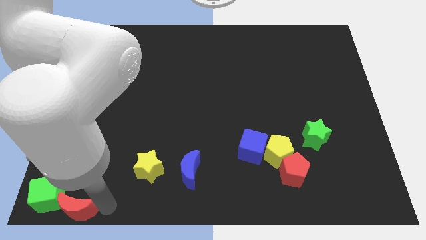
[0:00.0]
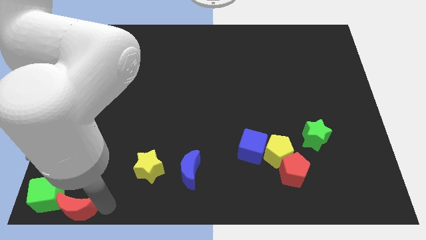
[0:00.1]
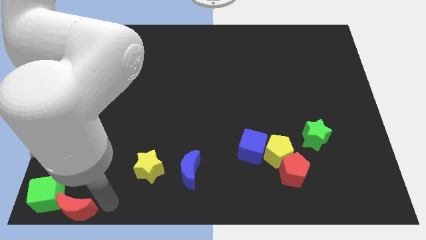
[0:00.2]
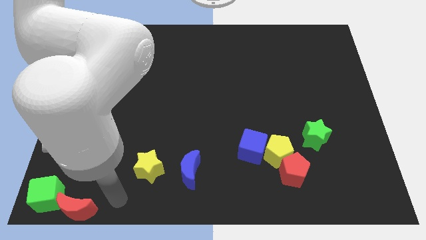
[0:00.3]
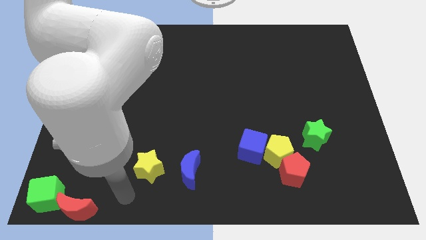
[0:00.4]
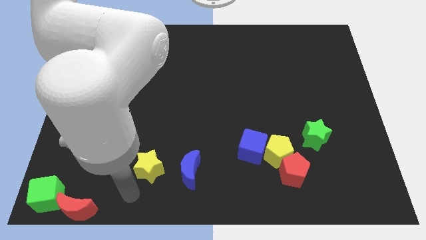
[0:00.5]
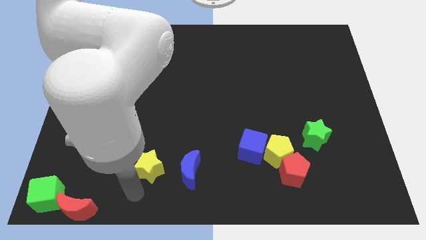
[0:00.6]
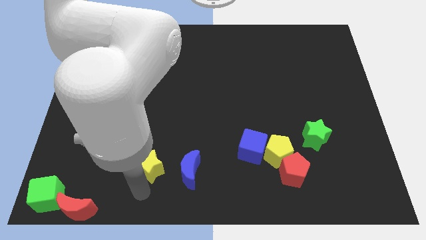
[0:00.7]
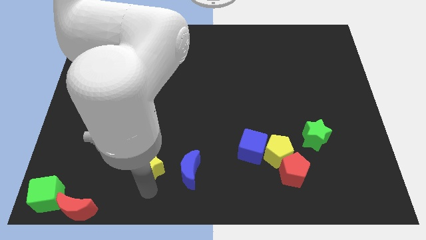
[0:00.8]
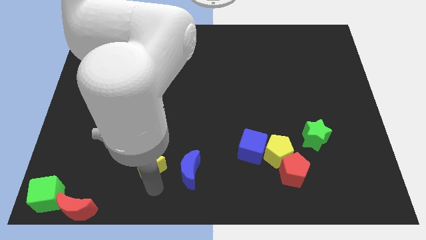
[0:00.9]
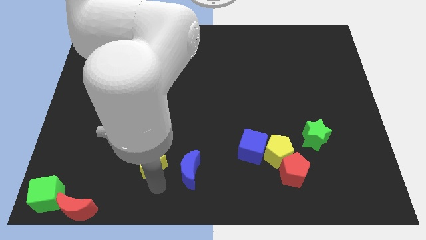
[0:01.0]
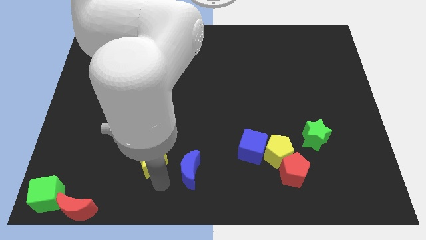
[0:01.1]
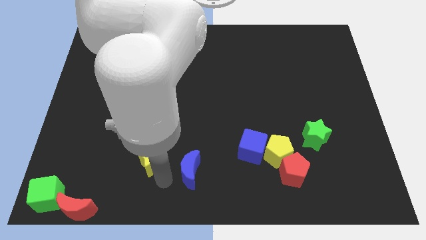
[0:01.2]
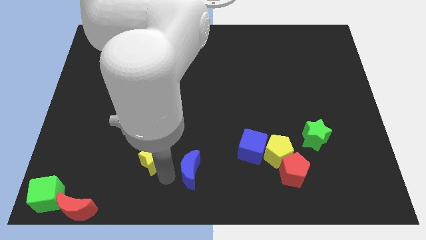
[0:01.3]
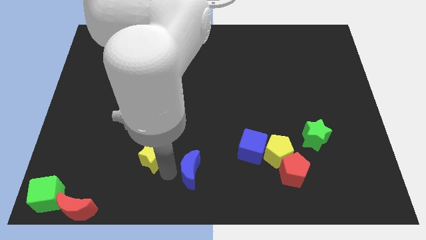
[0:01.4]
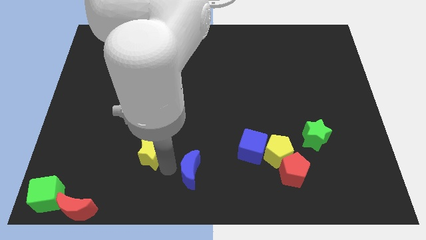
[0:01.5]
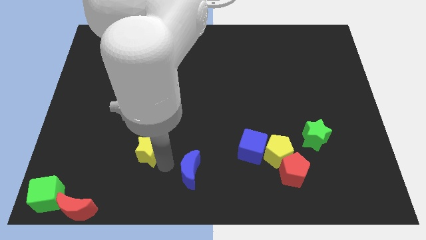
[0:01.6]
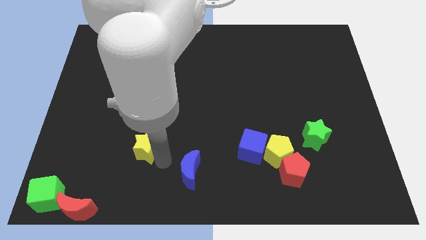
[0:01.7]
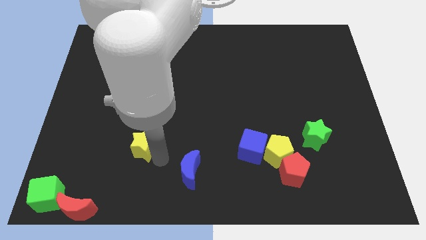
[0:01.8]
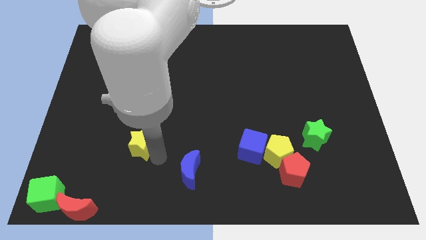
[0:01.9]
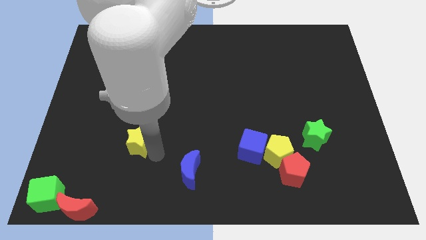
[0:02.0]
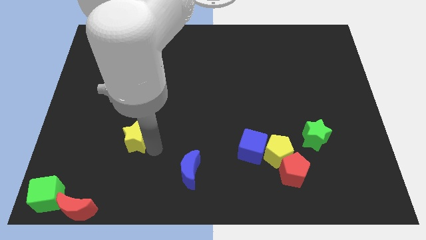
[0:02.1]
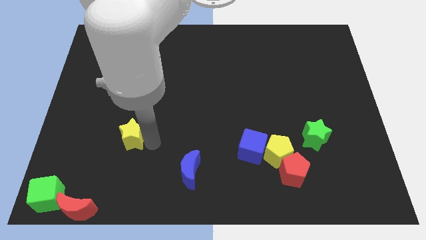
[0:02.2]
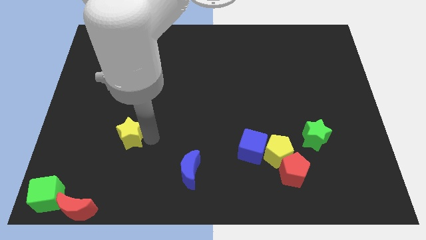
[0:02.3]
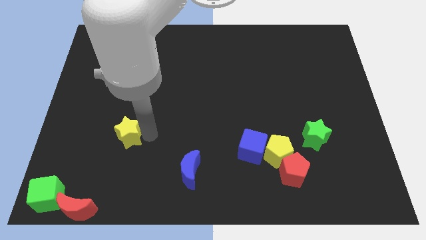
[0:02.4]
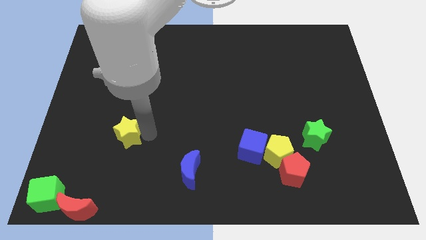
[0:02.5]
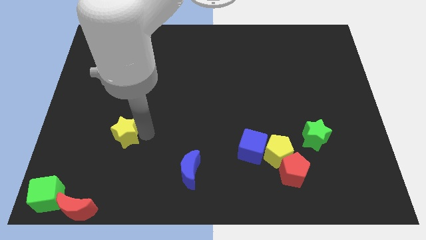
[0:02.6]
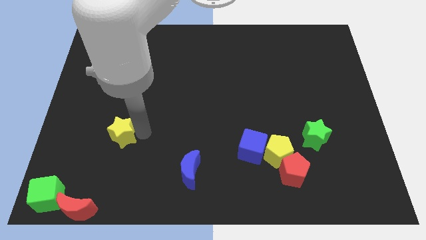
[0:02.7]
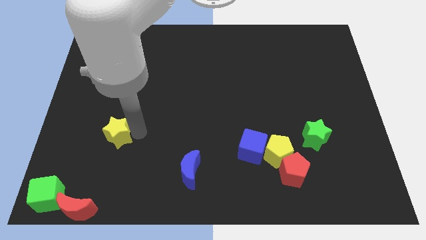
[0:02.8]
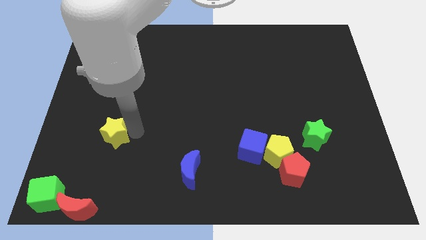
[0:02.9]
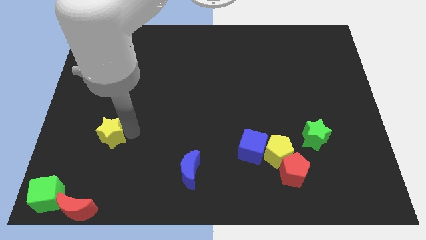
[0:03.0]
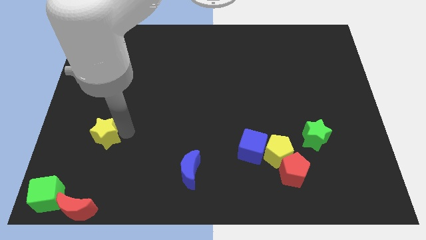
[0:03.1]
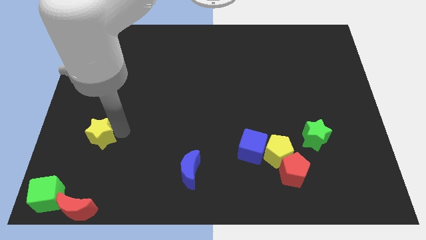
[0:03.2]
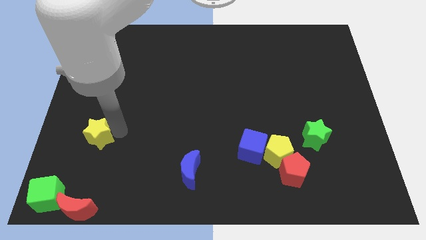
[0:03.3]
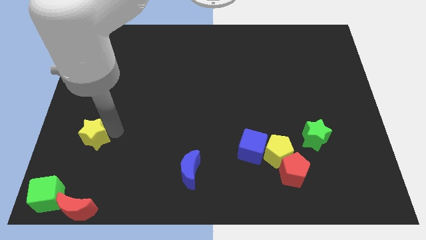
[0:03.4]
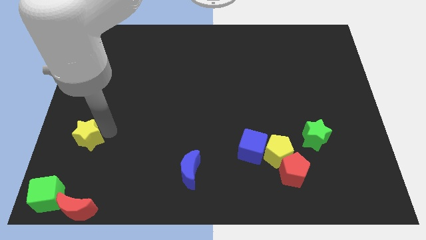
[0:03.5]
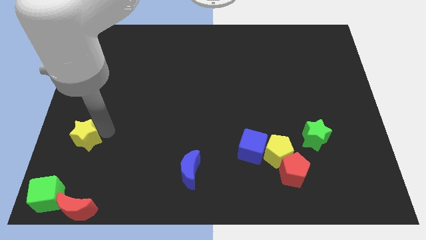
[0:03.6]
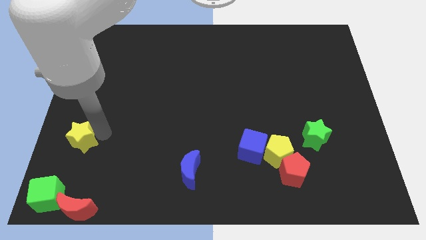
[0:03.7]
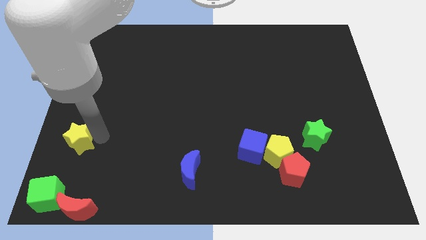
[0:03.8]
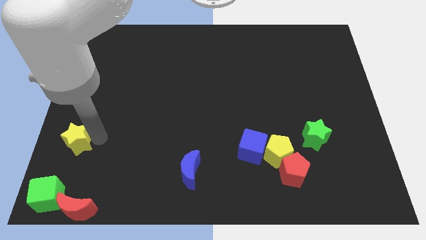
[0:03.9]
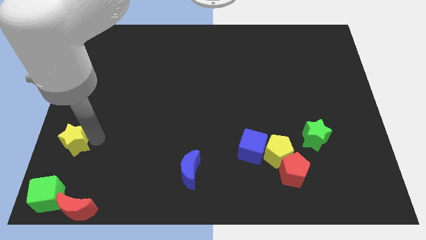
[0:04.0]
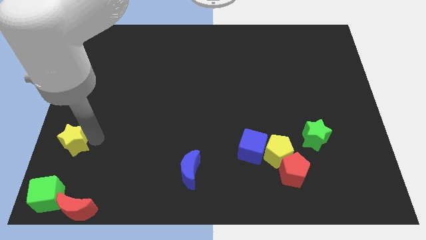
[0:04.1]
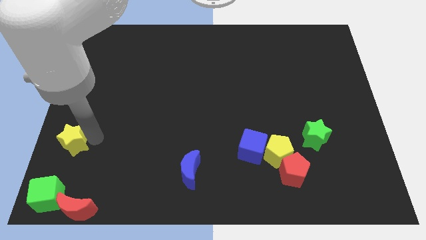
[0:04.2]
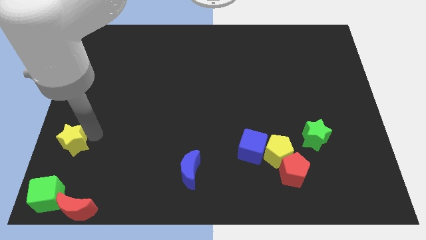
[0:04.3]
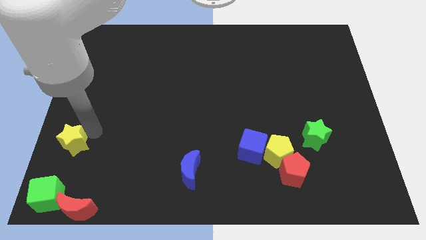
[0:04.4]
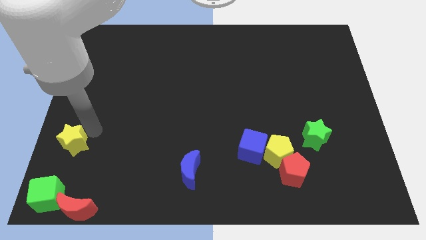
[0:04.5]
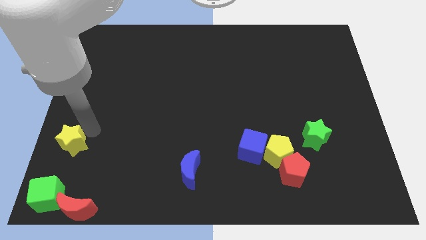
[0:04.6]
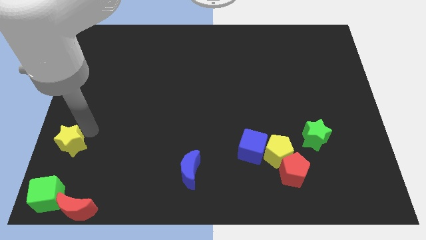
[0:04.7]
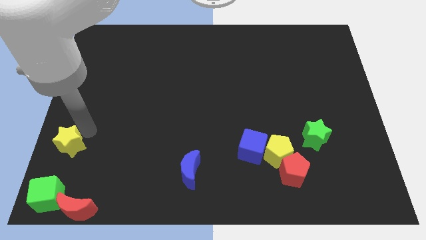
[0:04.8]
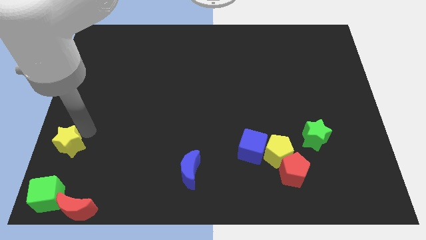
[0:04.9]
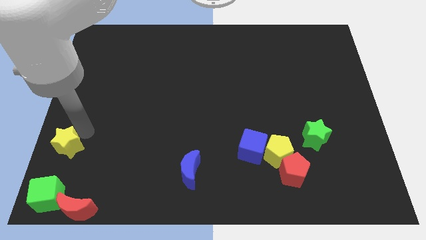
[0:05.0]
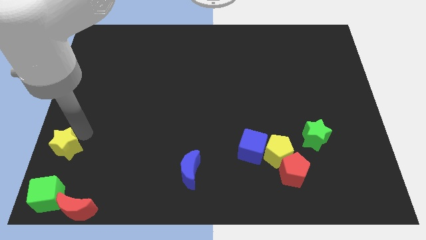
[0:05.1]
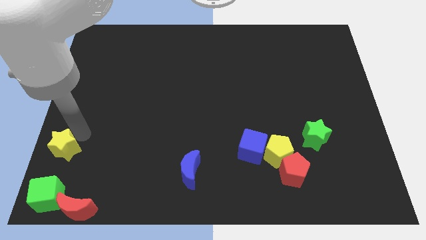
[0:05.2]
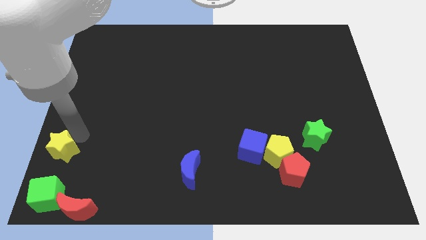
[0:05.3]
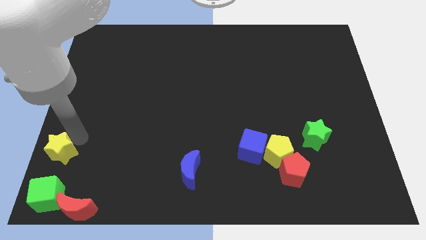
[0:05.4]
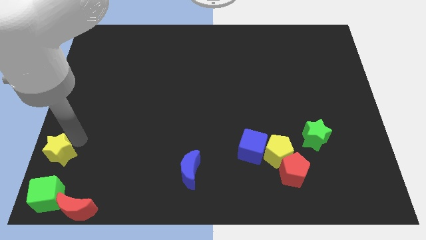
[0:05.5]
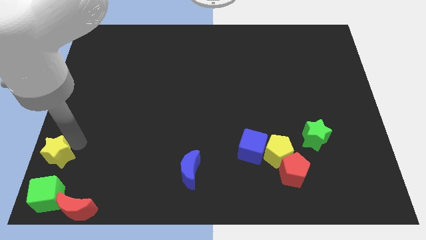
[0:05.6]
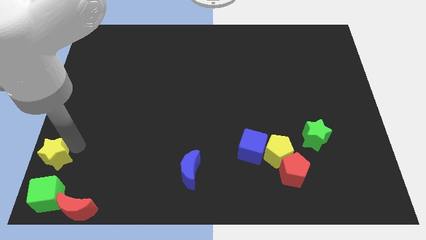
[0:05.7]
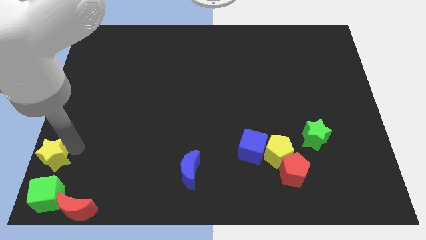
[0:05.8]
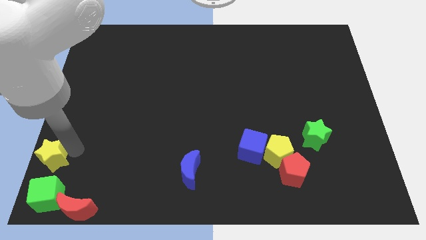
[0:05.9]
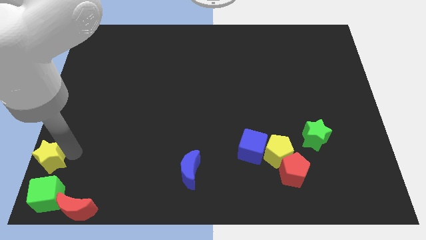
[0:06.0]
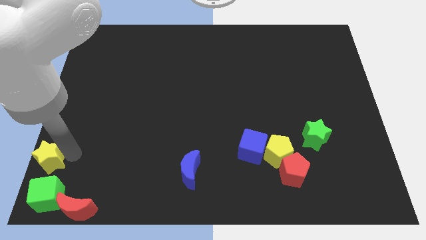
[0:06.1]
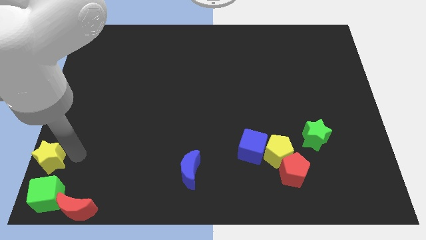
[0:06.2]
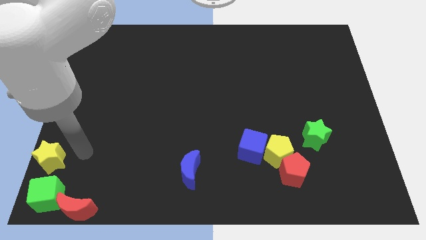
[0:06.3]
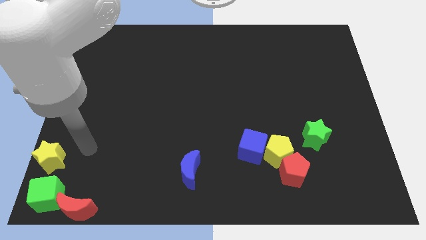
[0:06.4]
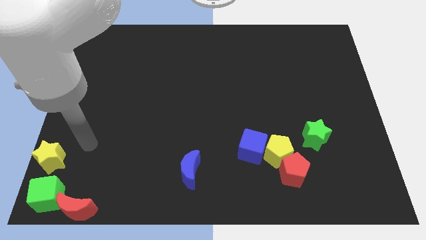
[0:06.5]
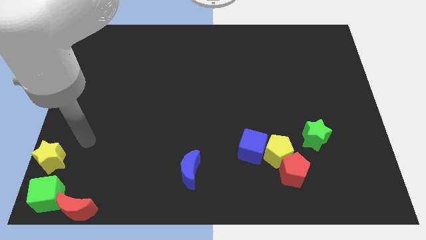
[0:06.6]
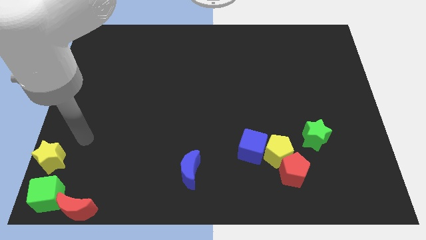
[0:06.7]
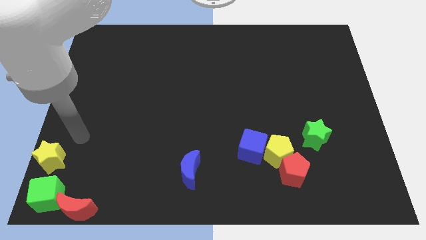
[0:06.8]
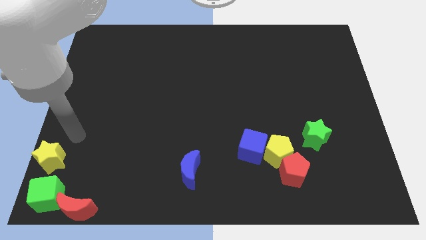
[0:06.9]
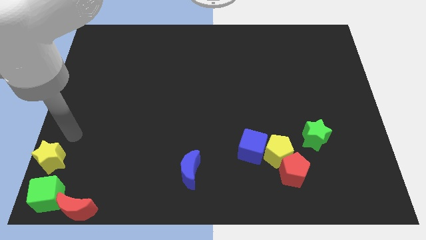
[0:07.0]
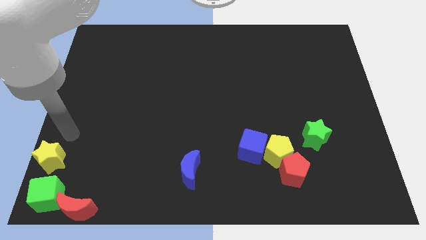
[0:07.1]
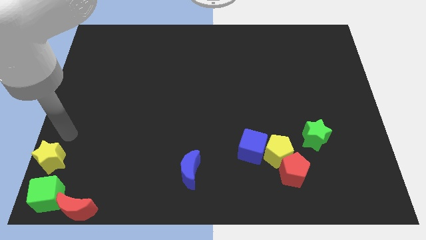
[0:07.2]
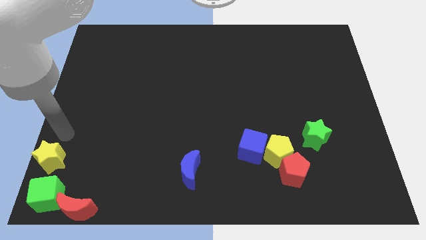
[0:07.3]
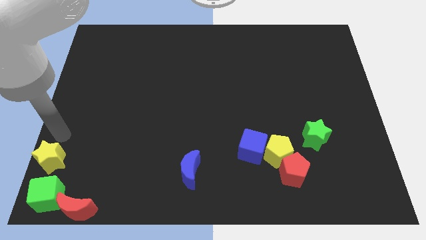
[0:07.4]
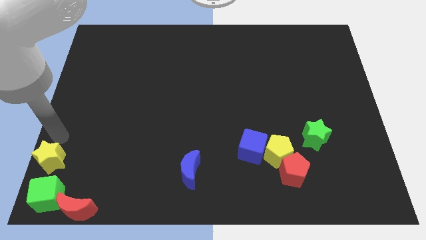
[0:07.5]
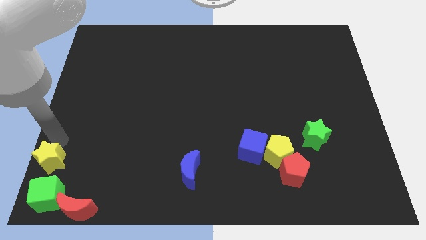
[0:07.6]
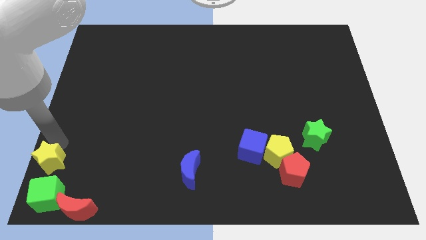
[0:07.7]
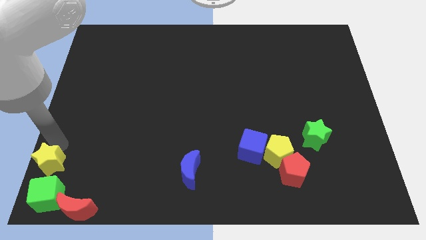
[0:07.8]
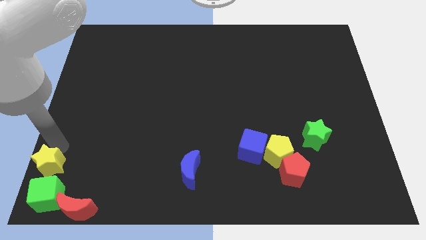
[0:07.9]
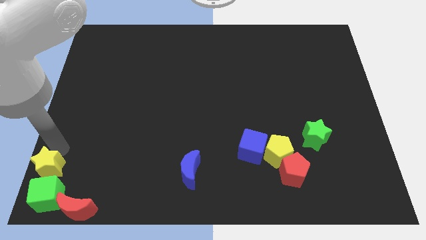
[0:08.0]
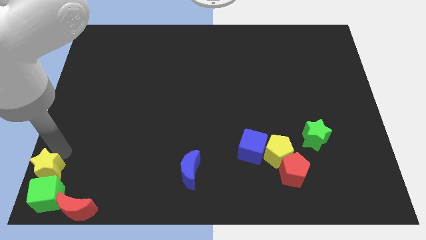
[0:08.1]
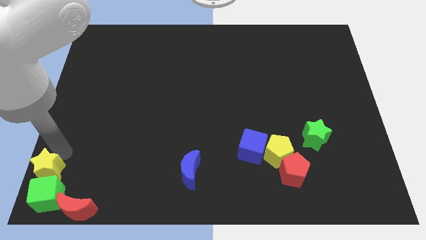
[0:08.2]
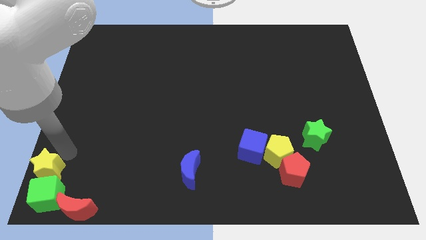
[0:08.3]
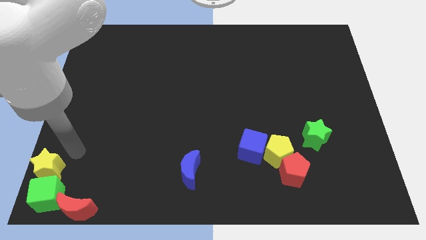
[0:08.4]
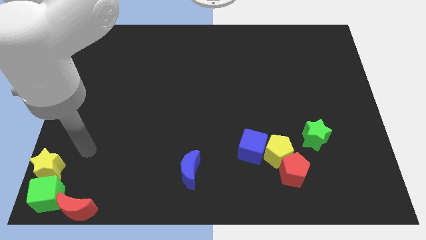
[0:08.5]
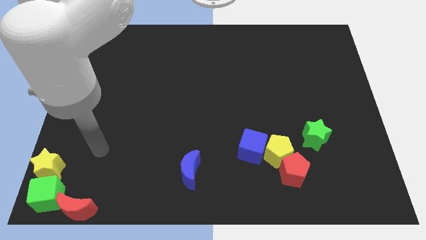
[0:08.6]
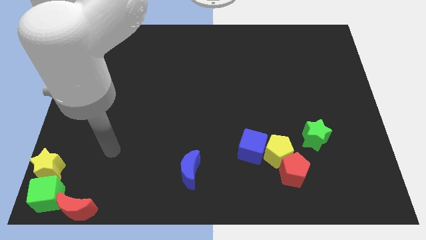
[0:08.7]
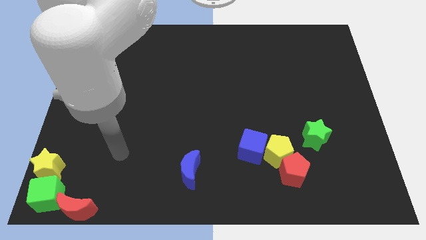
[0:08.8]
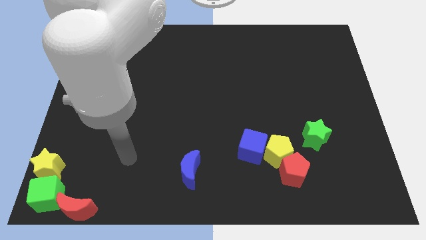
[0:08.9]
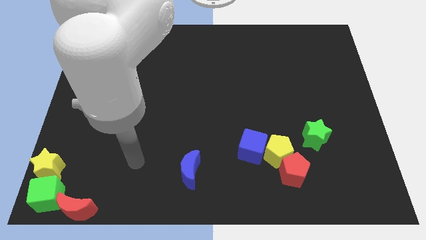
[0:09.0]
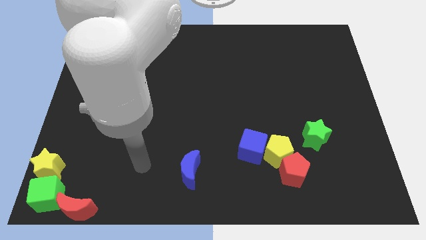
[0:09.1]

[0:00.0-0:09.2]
move the yellow star at the bottom of the left side

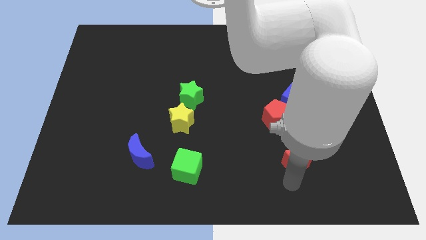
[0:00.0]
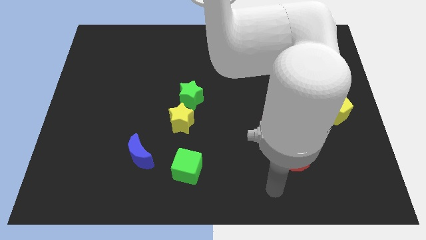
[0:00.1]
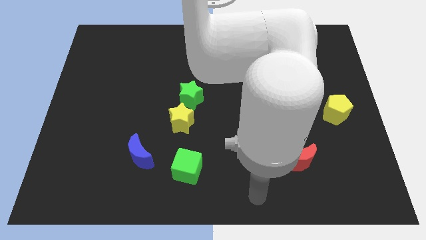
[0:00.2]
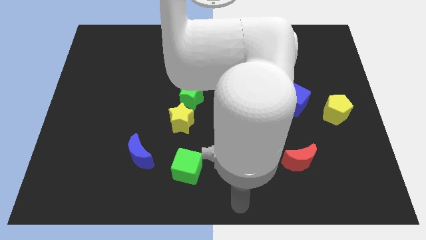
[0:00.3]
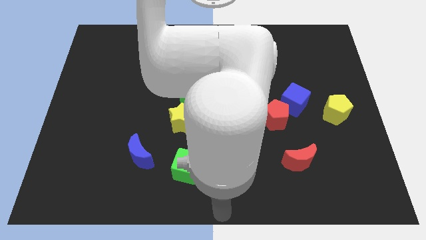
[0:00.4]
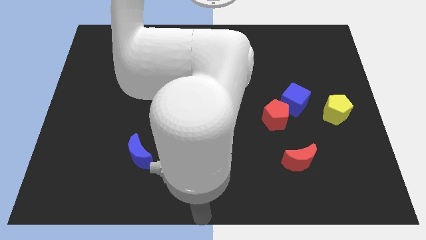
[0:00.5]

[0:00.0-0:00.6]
point your arm at the bottom center of the board
